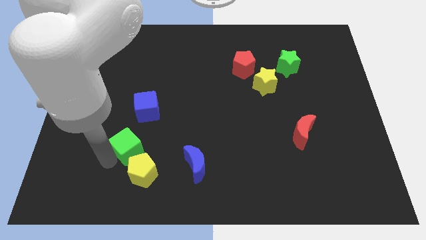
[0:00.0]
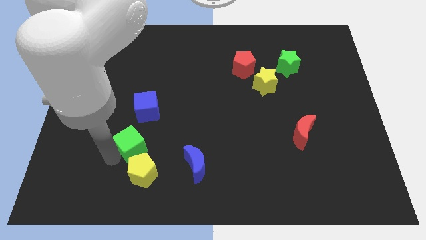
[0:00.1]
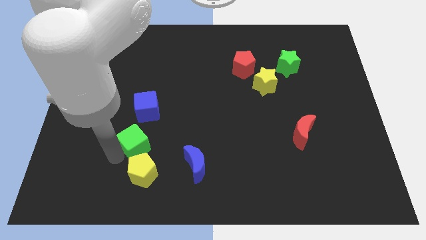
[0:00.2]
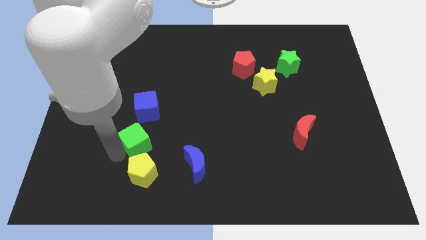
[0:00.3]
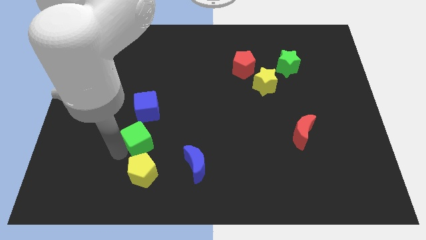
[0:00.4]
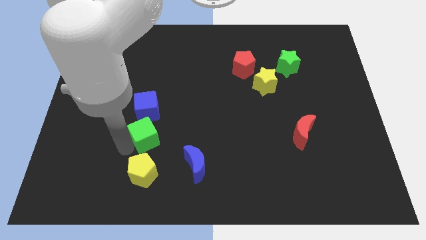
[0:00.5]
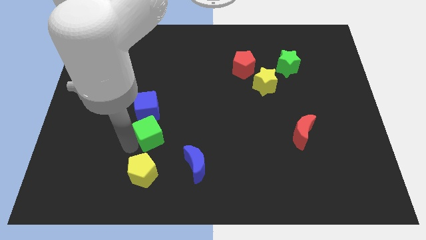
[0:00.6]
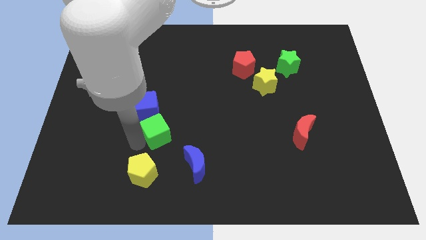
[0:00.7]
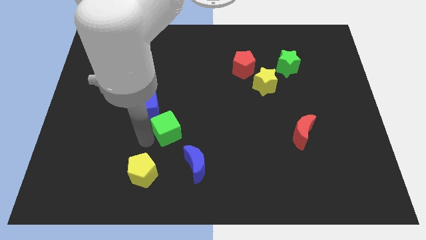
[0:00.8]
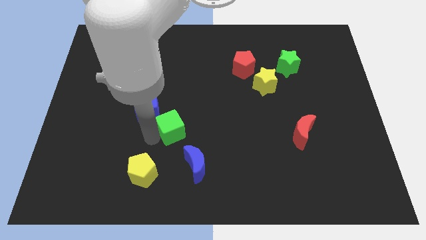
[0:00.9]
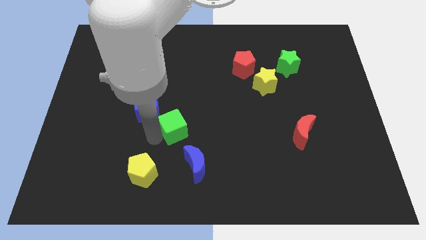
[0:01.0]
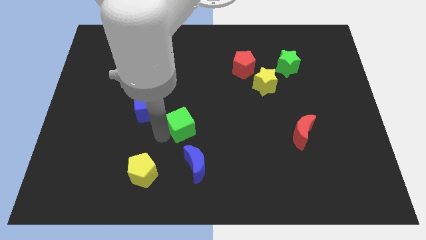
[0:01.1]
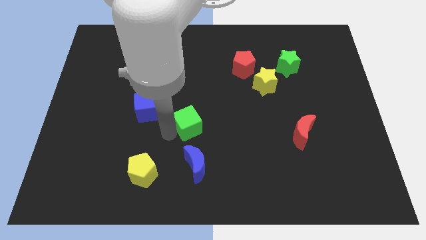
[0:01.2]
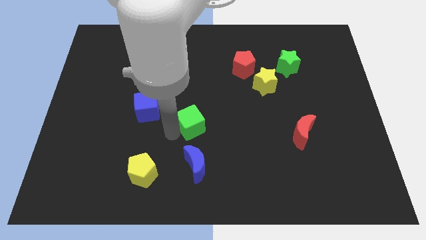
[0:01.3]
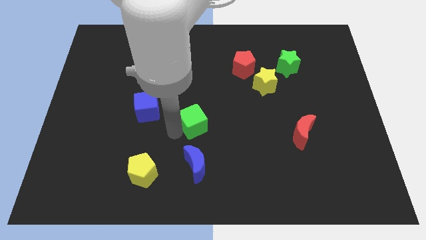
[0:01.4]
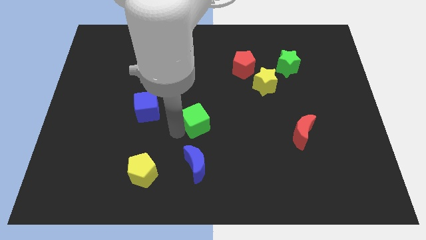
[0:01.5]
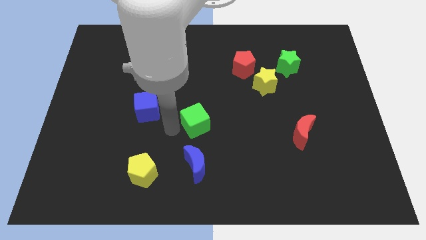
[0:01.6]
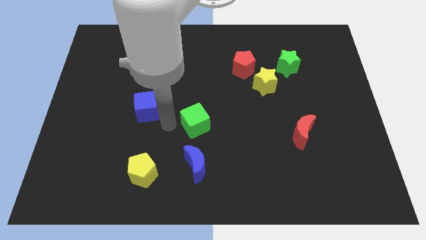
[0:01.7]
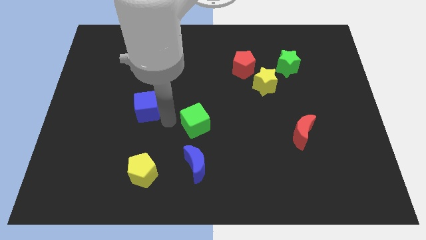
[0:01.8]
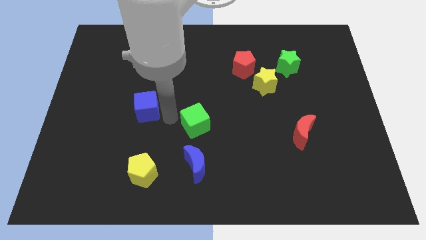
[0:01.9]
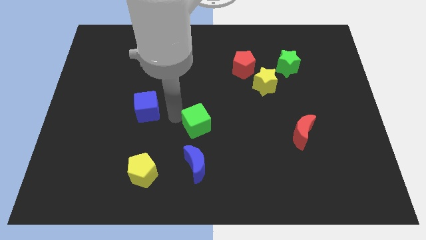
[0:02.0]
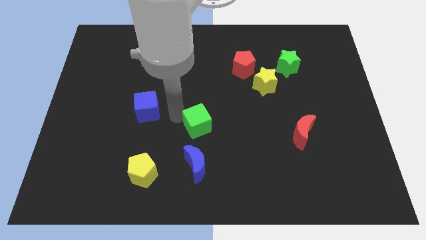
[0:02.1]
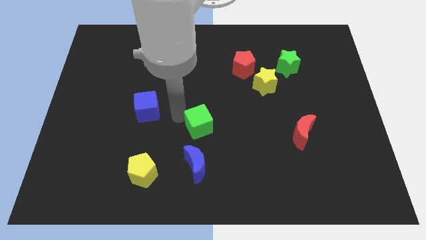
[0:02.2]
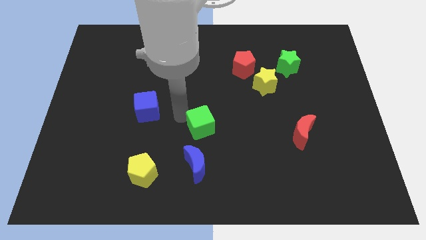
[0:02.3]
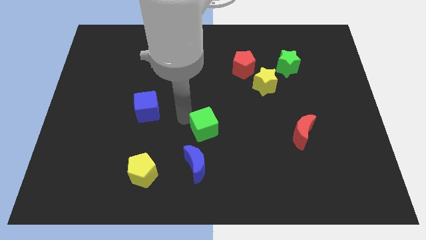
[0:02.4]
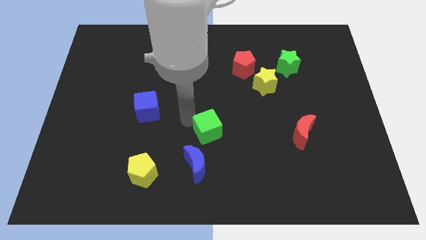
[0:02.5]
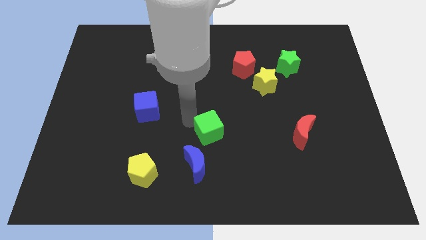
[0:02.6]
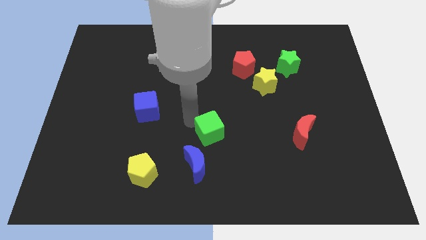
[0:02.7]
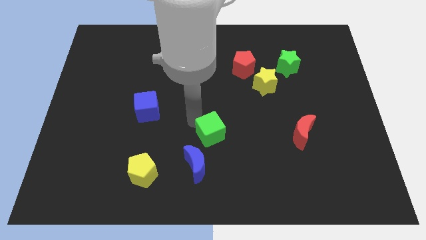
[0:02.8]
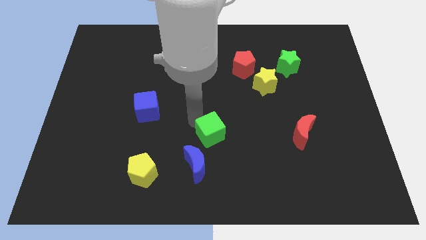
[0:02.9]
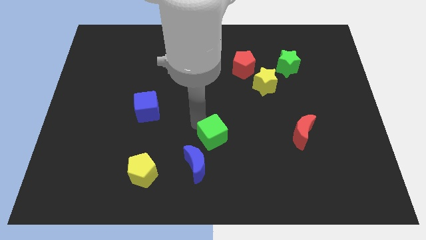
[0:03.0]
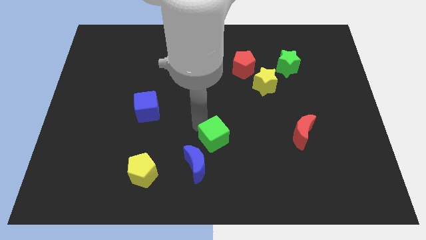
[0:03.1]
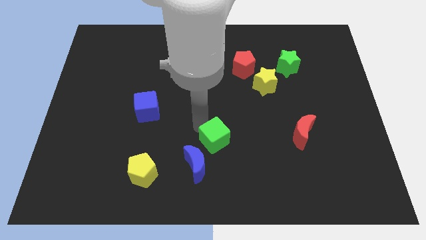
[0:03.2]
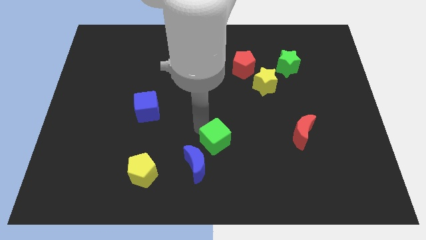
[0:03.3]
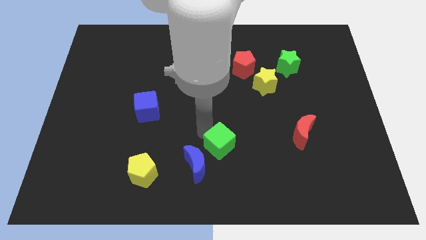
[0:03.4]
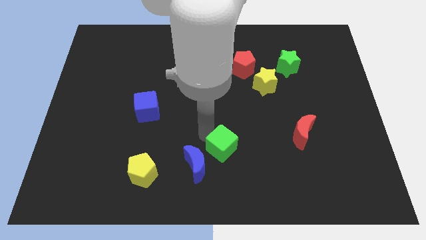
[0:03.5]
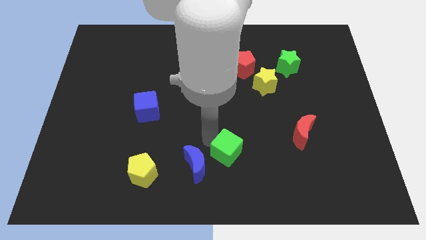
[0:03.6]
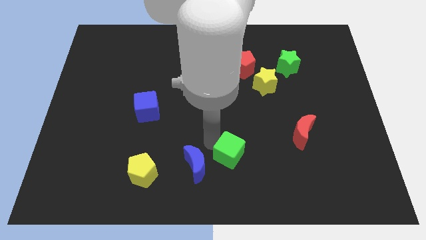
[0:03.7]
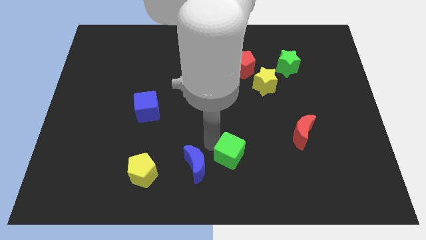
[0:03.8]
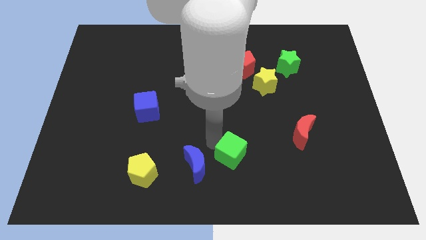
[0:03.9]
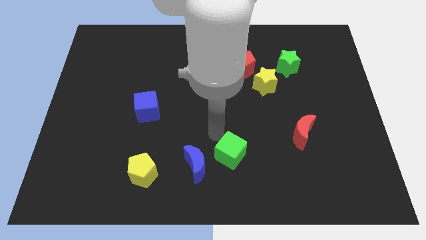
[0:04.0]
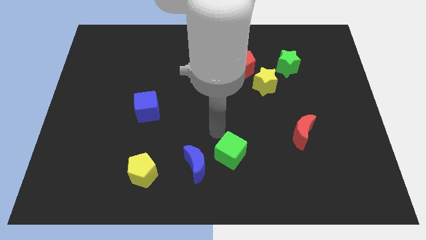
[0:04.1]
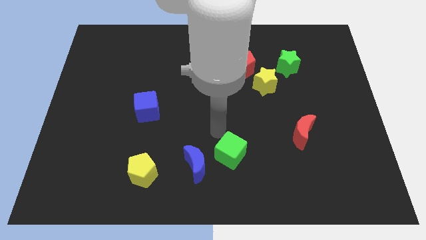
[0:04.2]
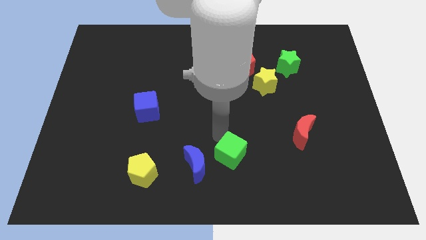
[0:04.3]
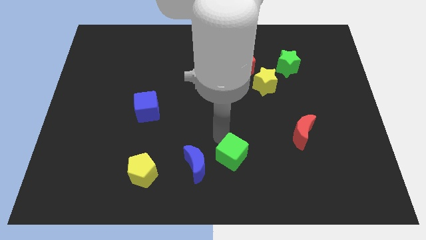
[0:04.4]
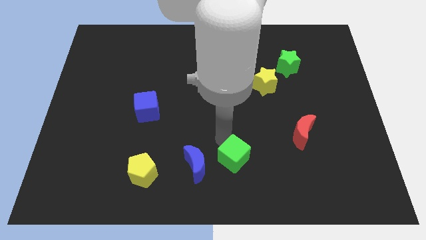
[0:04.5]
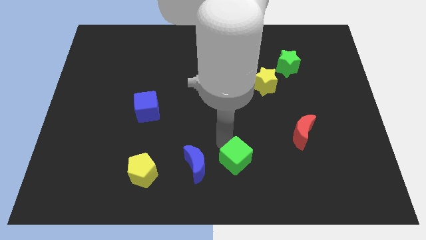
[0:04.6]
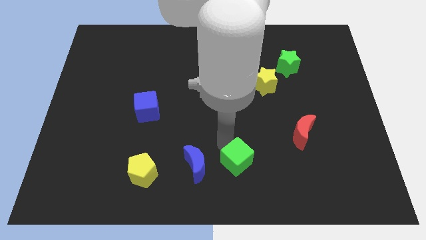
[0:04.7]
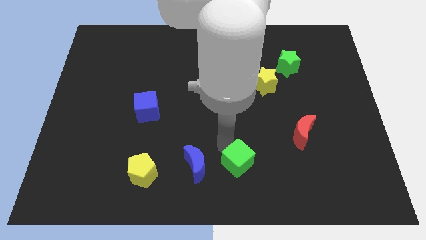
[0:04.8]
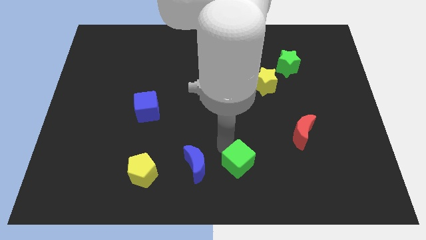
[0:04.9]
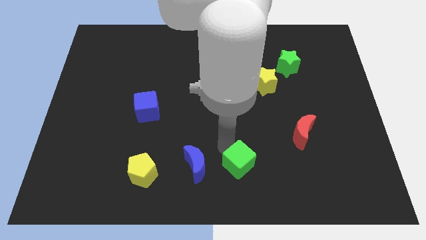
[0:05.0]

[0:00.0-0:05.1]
place green cube to the right of blue moon

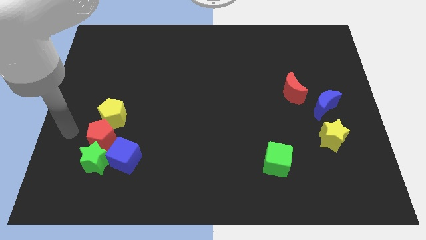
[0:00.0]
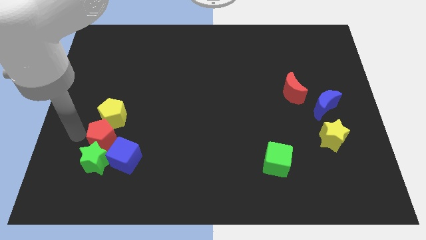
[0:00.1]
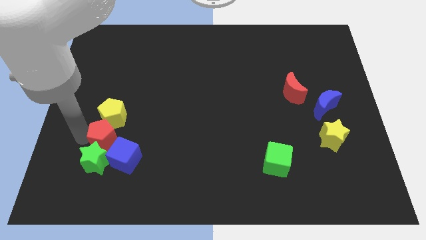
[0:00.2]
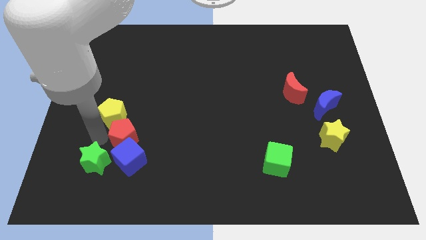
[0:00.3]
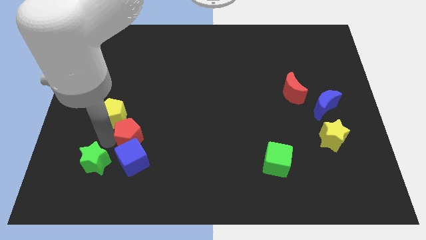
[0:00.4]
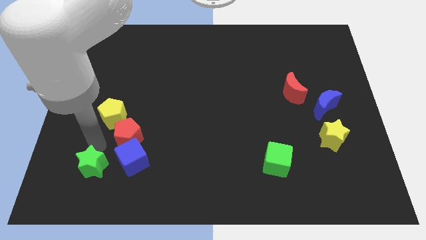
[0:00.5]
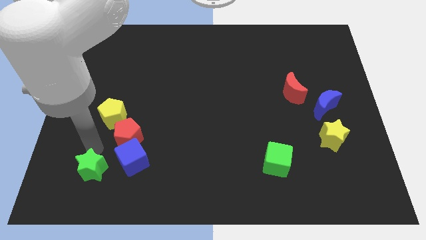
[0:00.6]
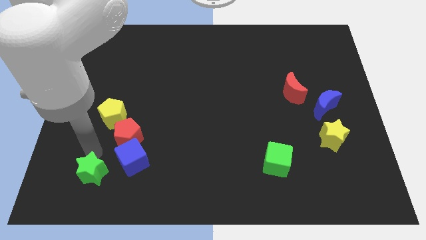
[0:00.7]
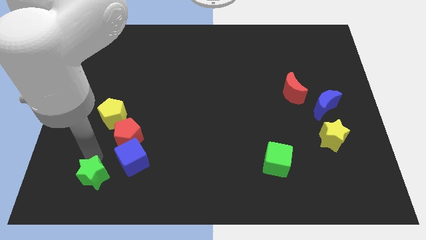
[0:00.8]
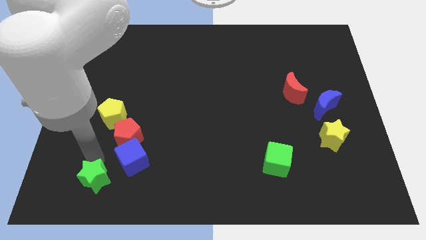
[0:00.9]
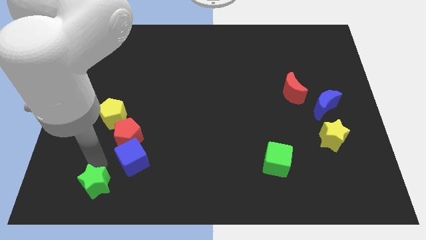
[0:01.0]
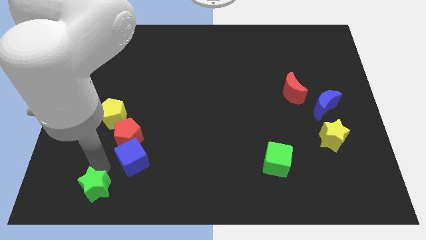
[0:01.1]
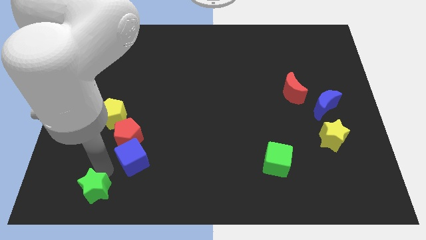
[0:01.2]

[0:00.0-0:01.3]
separate the green star from the group of blocks

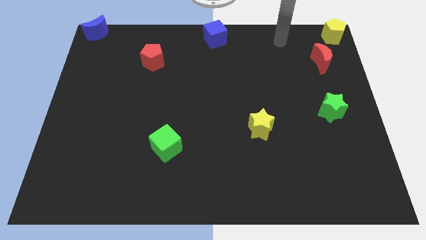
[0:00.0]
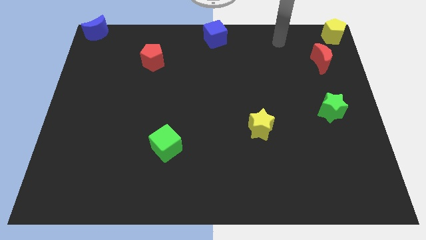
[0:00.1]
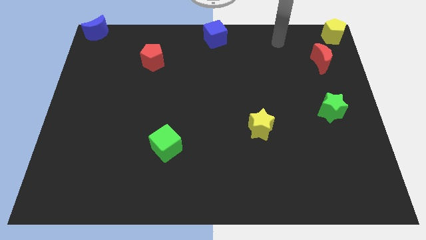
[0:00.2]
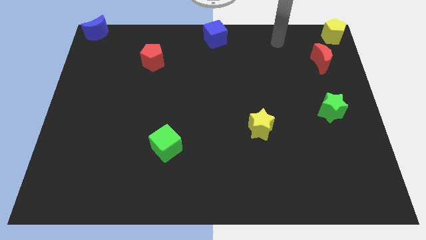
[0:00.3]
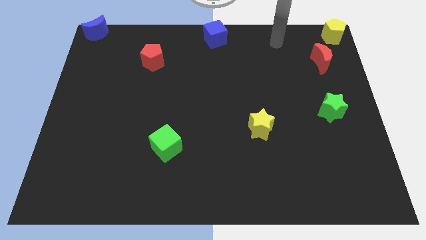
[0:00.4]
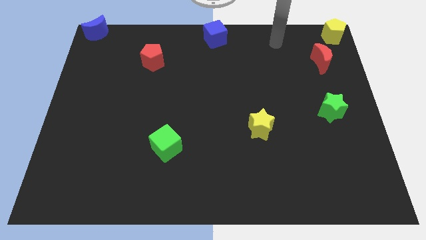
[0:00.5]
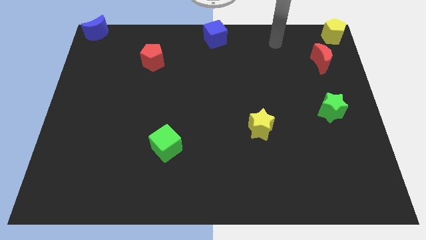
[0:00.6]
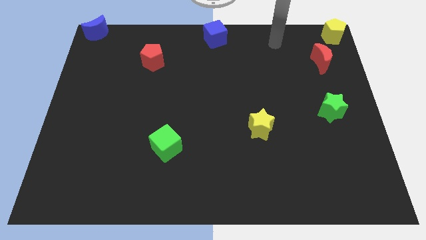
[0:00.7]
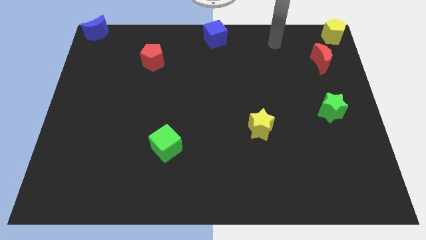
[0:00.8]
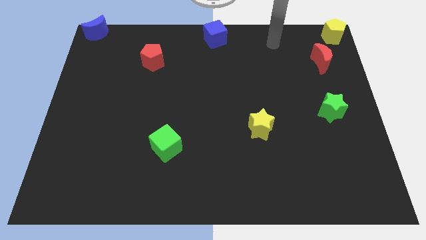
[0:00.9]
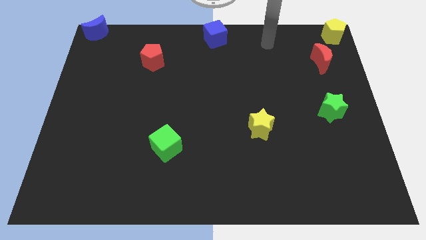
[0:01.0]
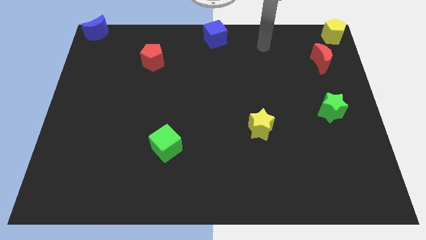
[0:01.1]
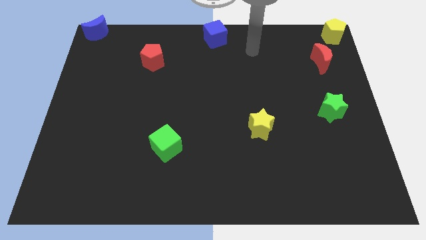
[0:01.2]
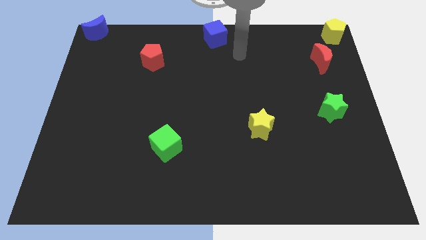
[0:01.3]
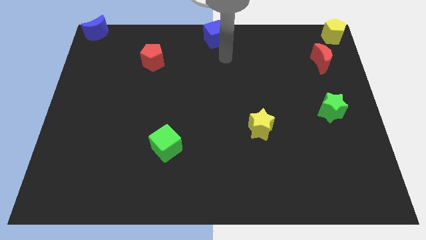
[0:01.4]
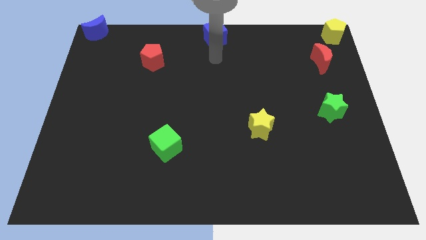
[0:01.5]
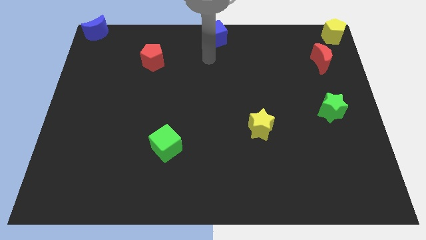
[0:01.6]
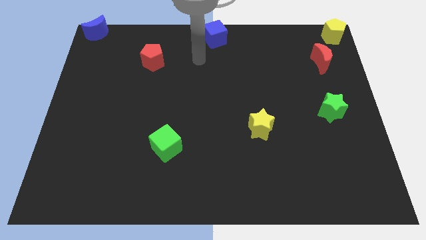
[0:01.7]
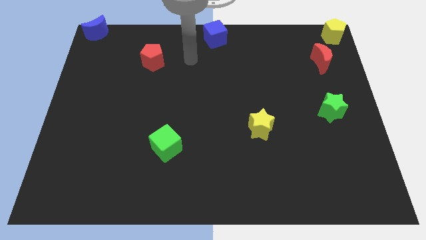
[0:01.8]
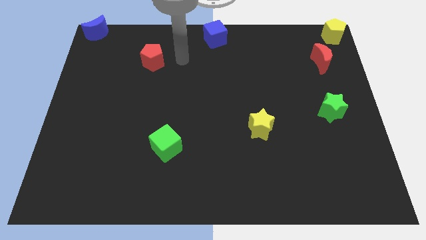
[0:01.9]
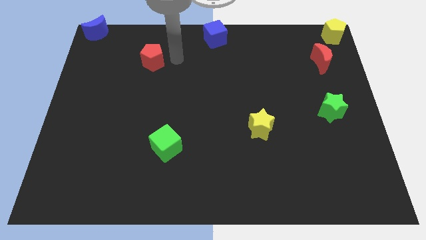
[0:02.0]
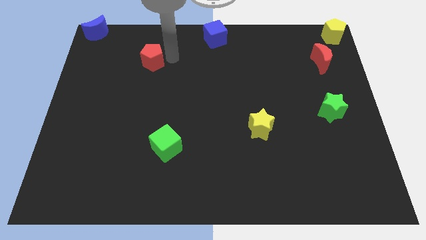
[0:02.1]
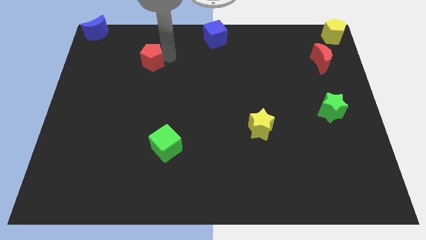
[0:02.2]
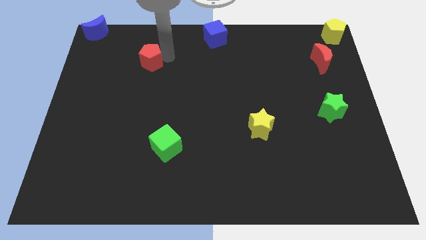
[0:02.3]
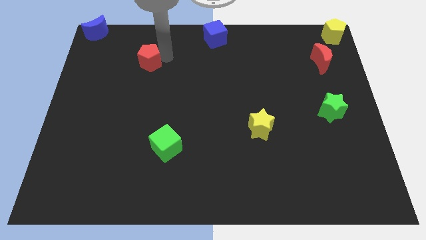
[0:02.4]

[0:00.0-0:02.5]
touch the right of the red pentagon

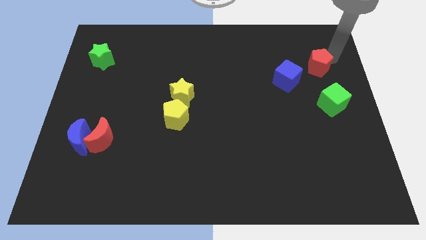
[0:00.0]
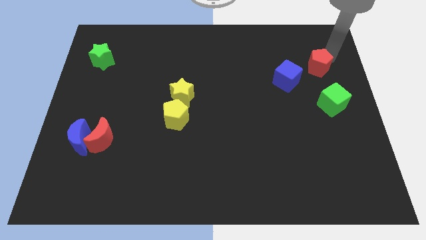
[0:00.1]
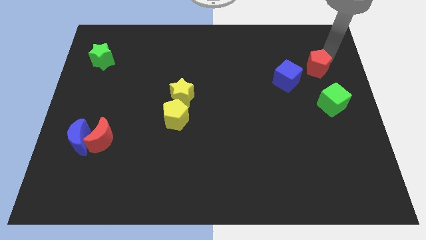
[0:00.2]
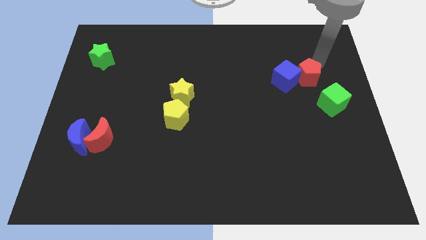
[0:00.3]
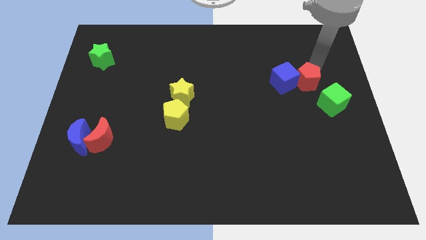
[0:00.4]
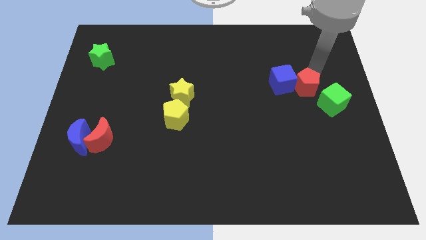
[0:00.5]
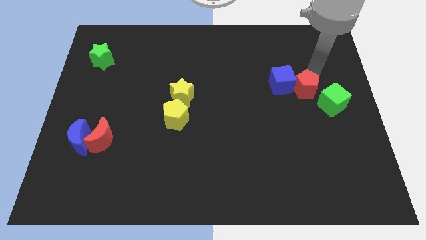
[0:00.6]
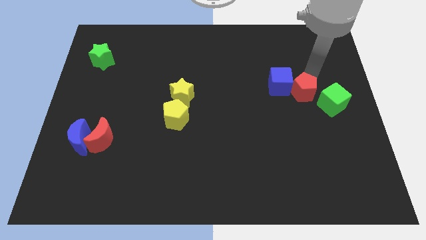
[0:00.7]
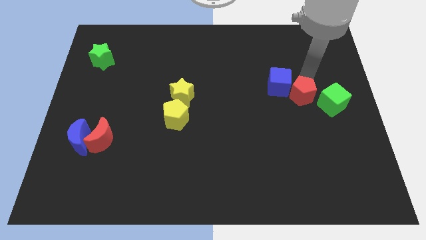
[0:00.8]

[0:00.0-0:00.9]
place the red pentagon in between the cubes
